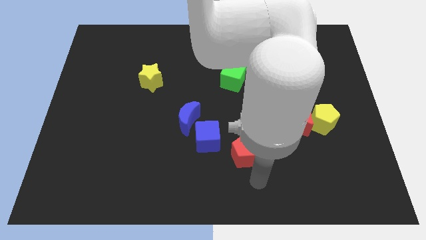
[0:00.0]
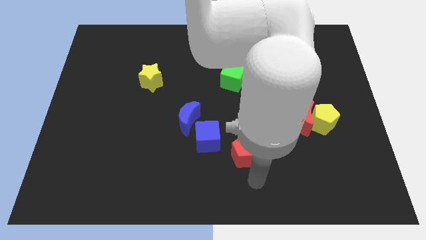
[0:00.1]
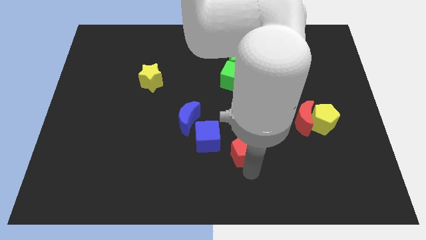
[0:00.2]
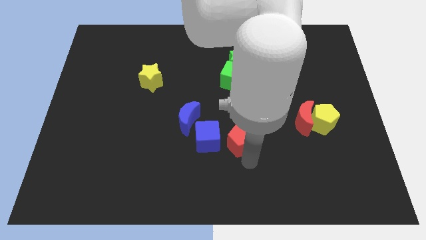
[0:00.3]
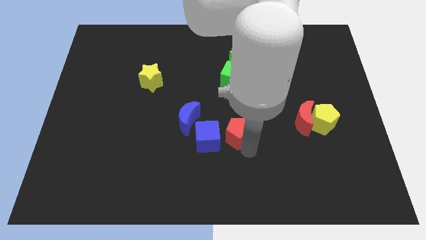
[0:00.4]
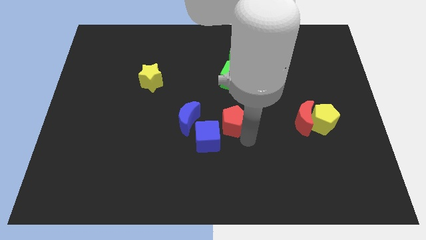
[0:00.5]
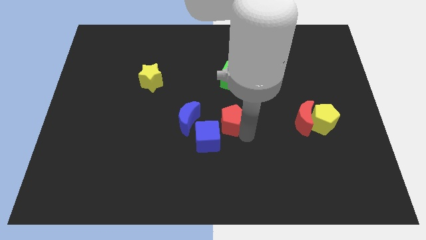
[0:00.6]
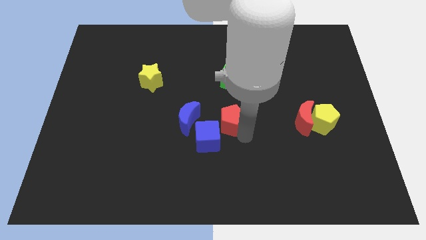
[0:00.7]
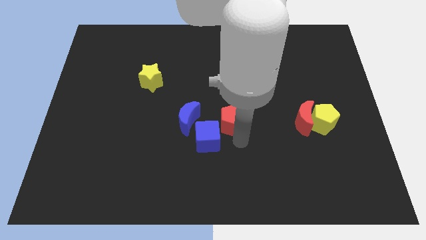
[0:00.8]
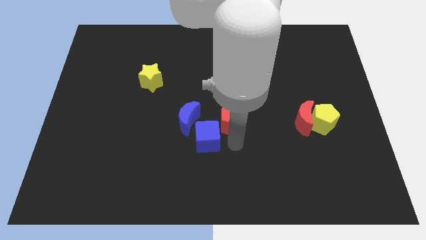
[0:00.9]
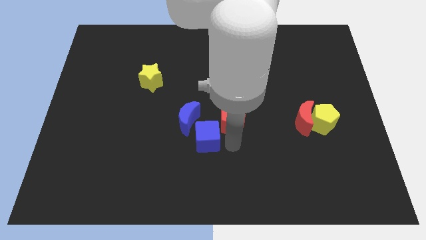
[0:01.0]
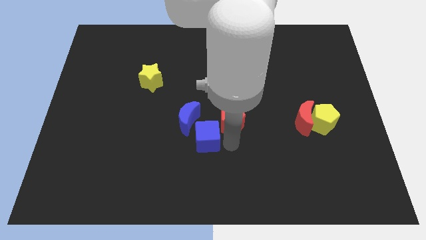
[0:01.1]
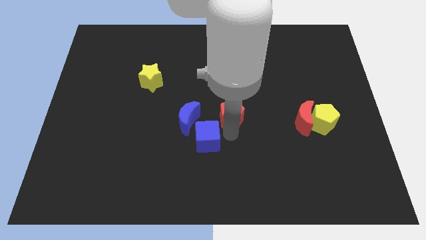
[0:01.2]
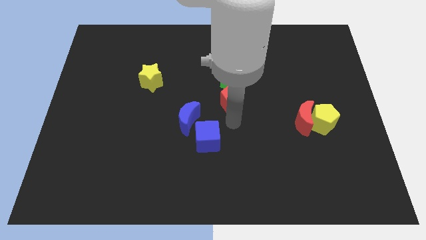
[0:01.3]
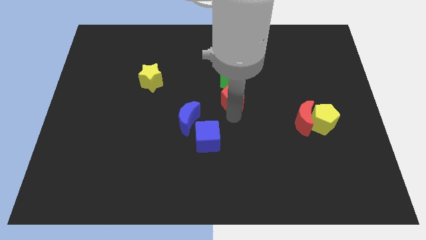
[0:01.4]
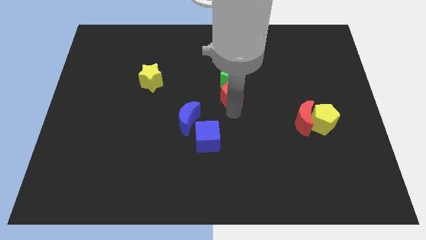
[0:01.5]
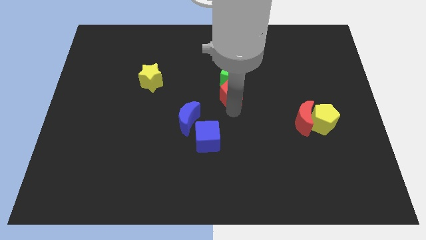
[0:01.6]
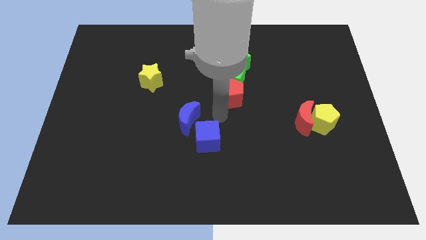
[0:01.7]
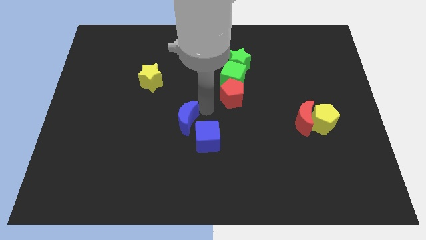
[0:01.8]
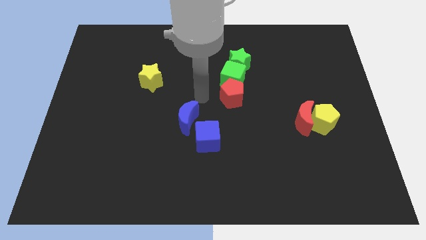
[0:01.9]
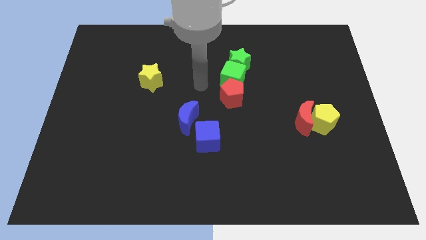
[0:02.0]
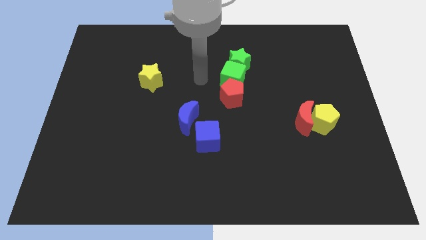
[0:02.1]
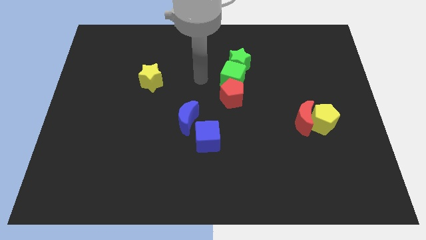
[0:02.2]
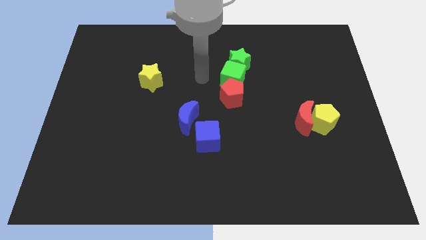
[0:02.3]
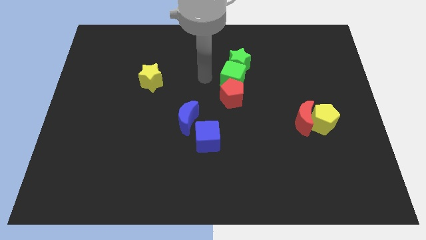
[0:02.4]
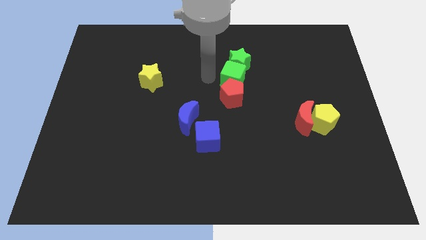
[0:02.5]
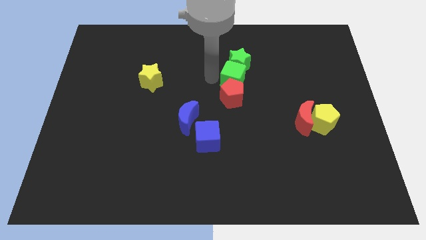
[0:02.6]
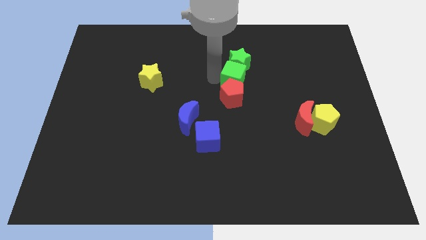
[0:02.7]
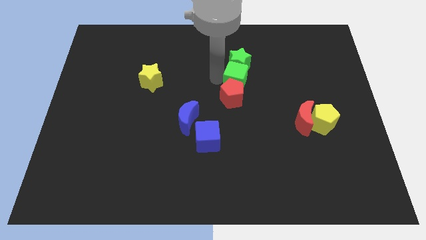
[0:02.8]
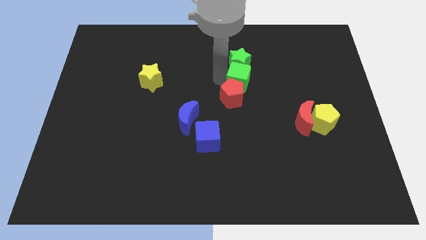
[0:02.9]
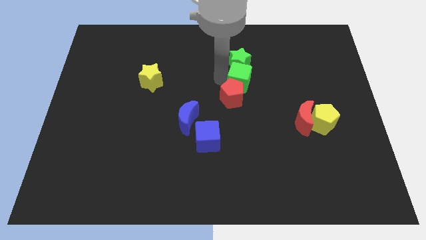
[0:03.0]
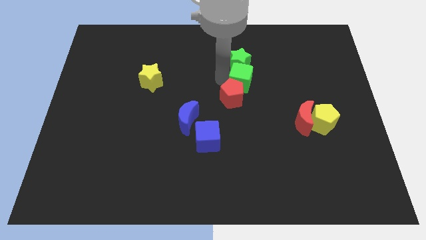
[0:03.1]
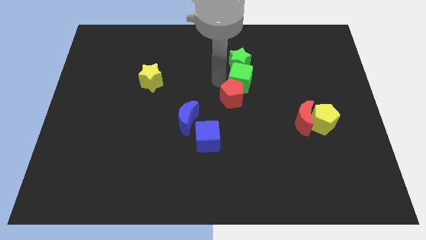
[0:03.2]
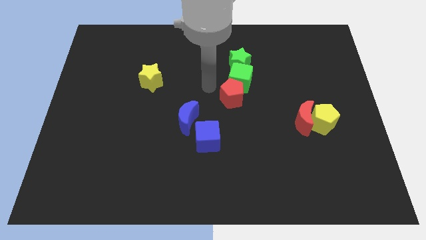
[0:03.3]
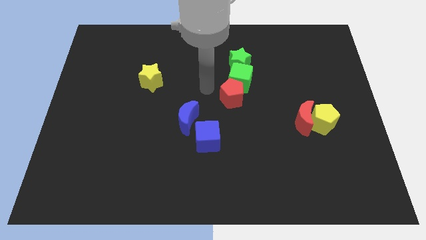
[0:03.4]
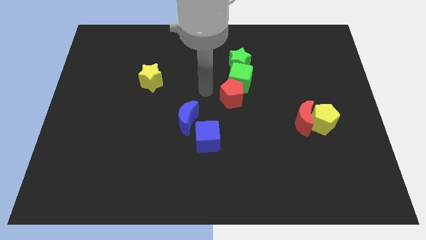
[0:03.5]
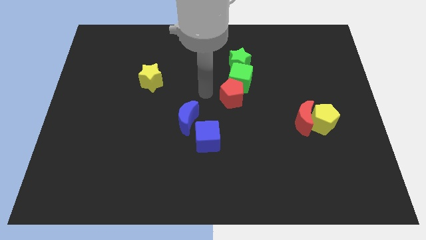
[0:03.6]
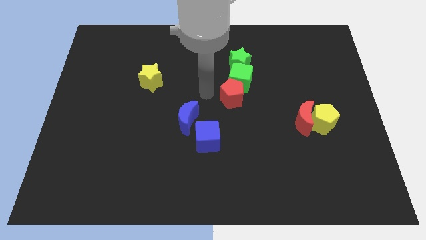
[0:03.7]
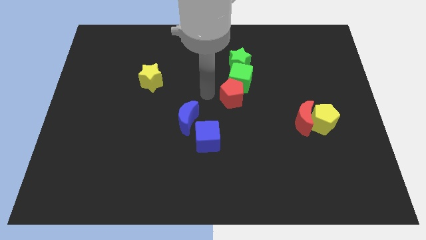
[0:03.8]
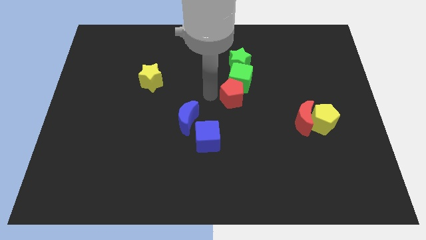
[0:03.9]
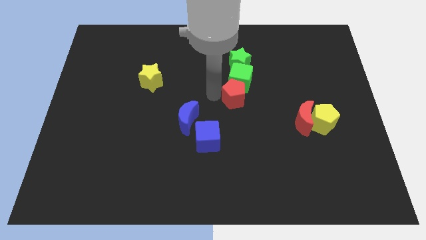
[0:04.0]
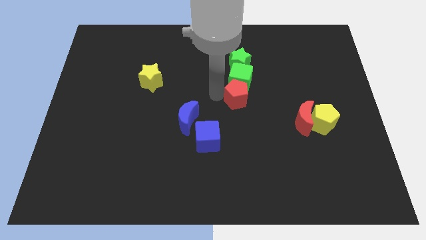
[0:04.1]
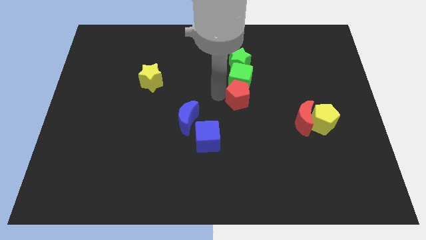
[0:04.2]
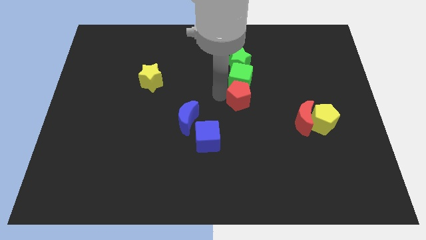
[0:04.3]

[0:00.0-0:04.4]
move the green cube and red pentagon to the bottom side of the green star

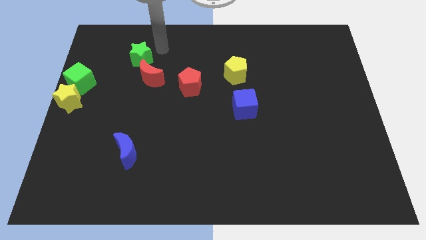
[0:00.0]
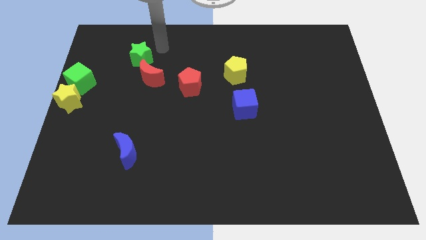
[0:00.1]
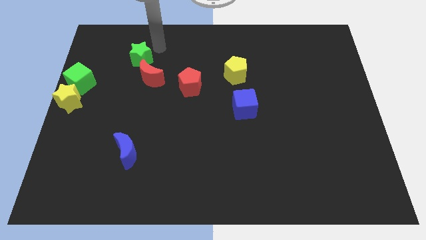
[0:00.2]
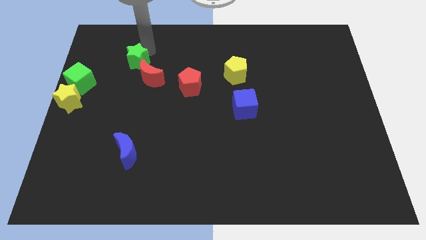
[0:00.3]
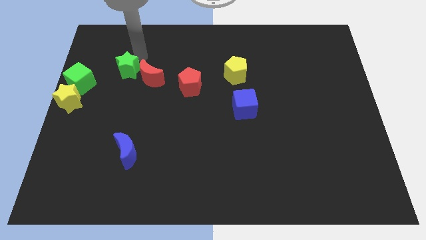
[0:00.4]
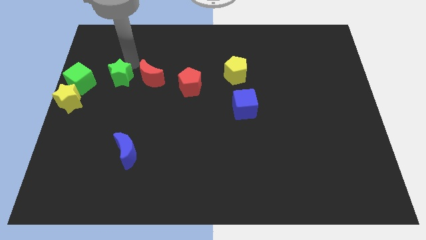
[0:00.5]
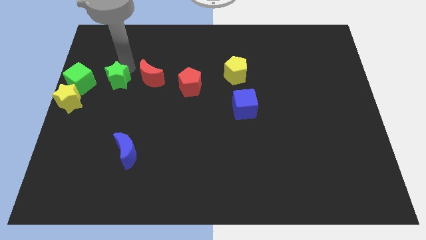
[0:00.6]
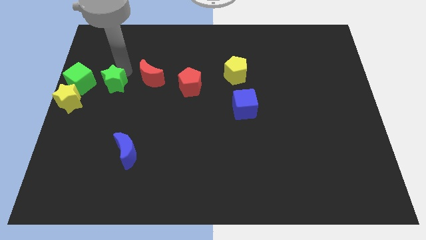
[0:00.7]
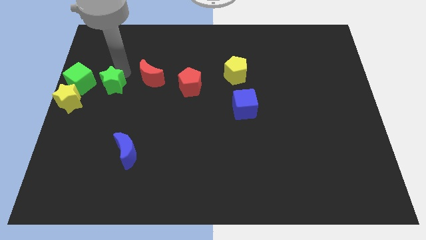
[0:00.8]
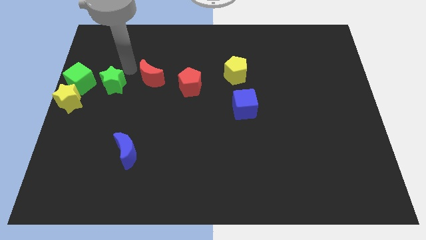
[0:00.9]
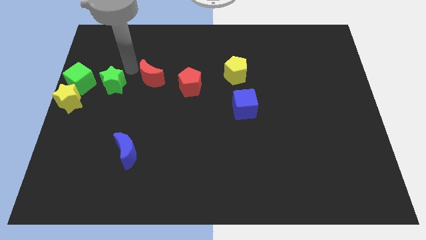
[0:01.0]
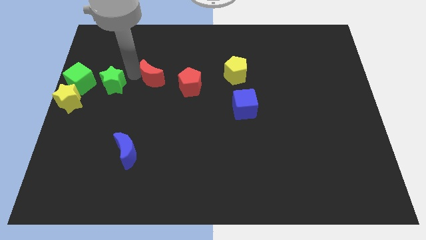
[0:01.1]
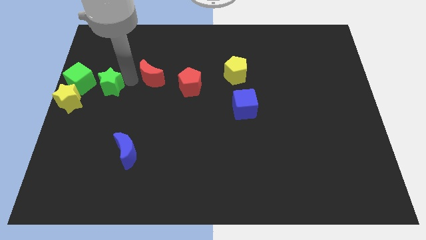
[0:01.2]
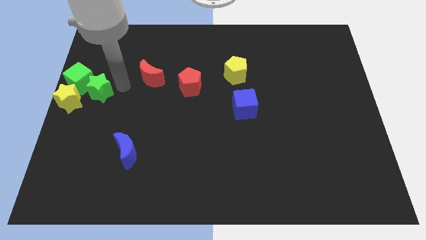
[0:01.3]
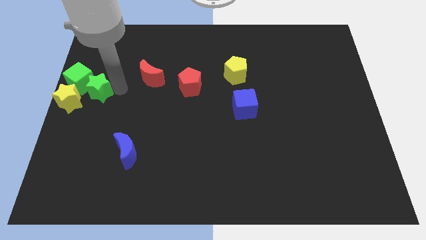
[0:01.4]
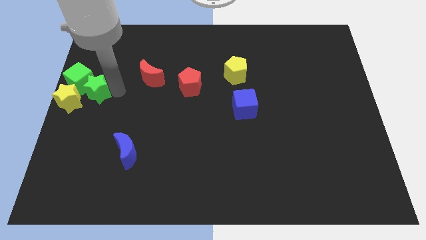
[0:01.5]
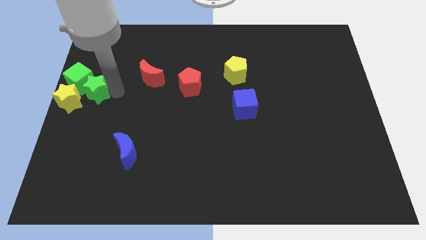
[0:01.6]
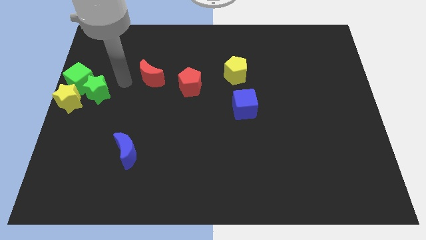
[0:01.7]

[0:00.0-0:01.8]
move the green star right to the green cube

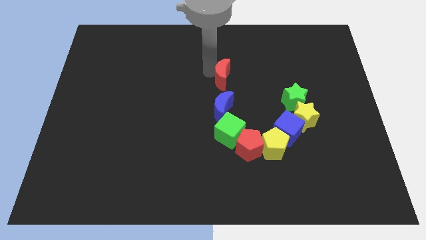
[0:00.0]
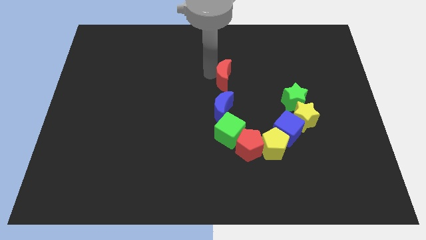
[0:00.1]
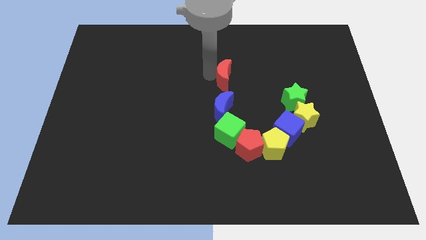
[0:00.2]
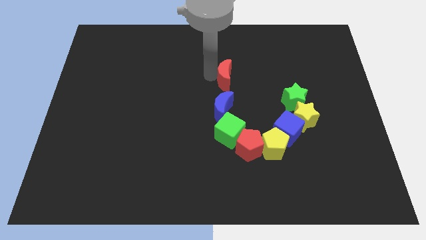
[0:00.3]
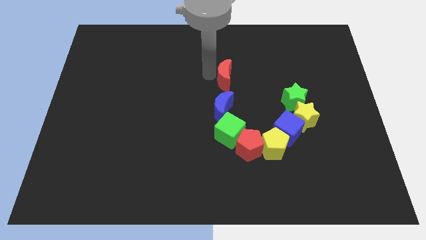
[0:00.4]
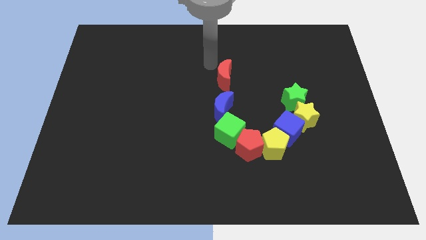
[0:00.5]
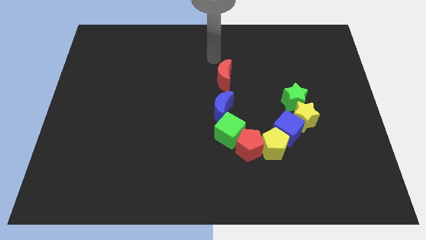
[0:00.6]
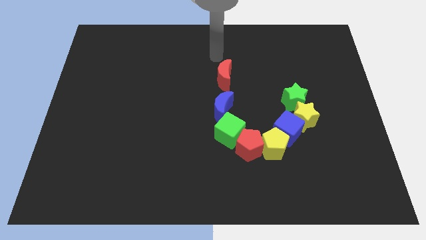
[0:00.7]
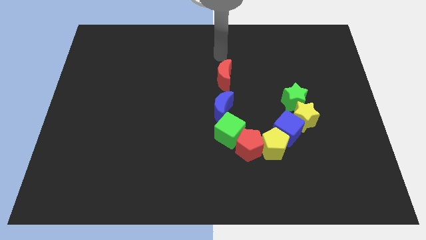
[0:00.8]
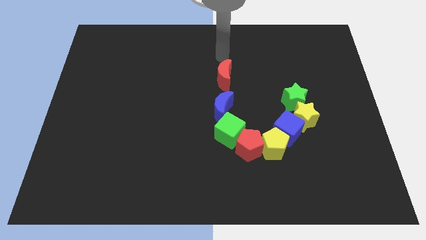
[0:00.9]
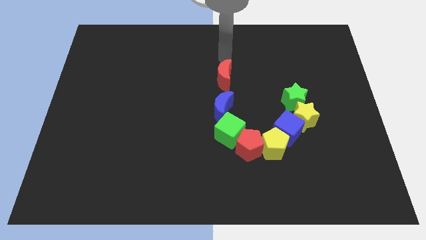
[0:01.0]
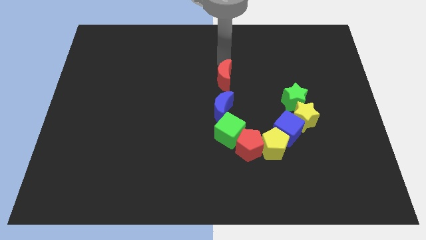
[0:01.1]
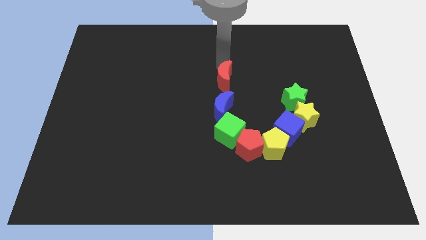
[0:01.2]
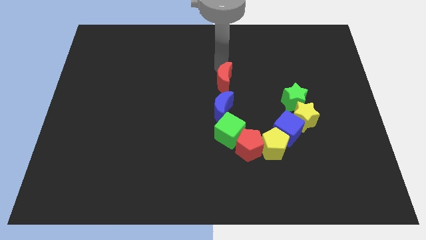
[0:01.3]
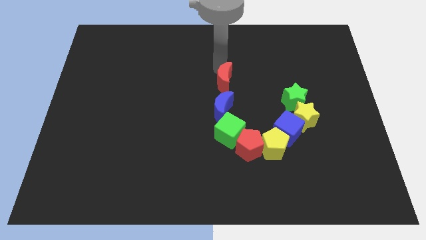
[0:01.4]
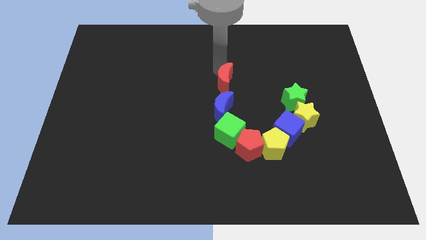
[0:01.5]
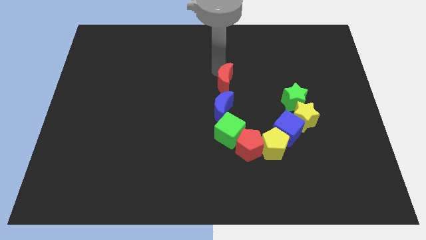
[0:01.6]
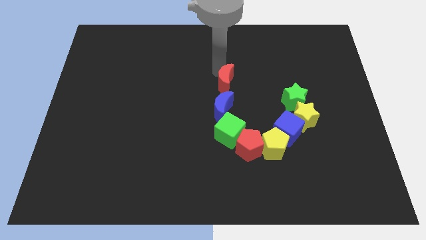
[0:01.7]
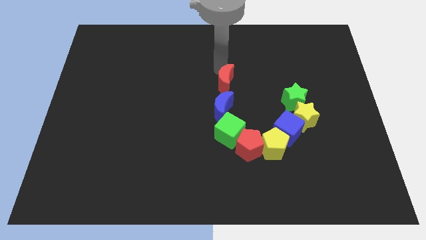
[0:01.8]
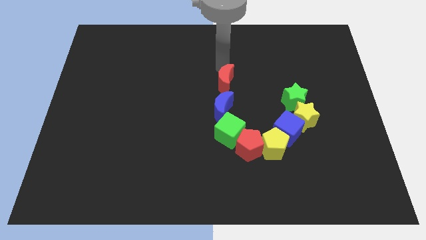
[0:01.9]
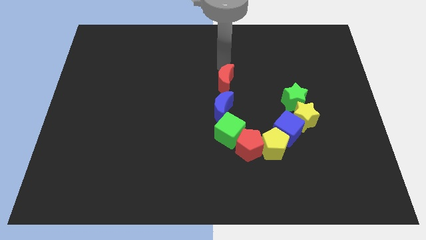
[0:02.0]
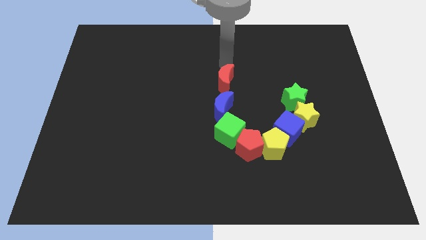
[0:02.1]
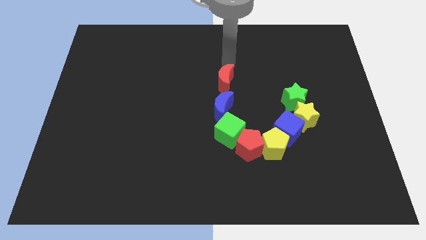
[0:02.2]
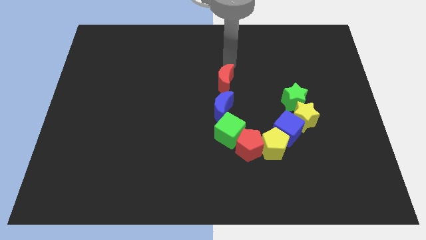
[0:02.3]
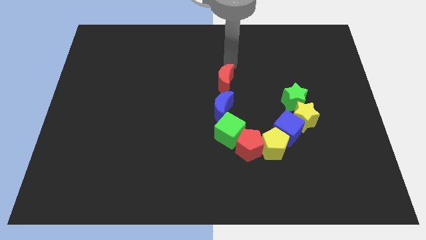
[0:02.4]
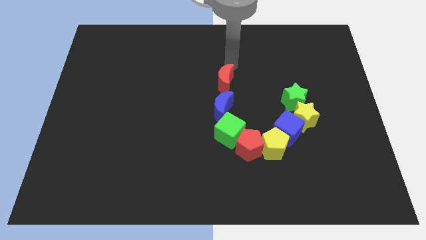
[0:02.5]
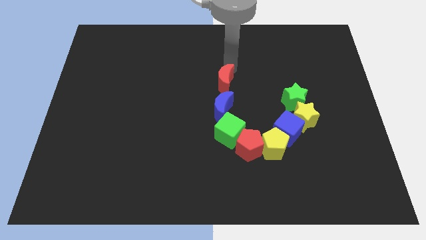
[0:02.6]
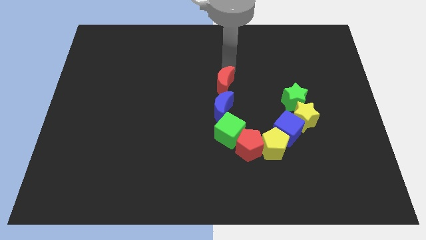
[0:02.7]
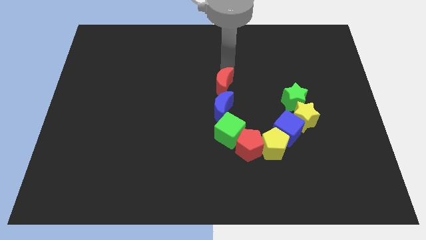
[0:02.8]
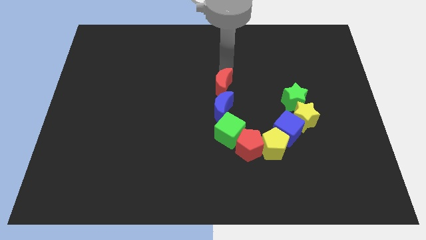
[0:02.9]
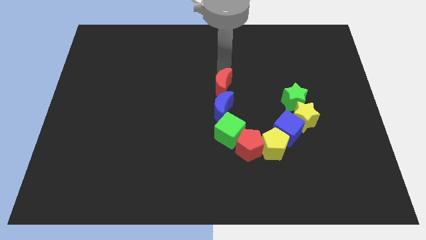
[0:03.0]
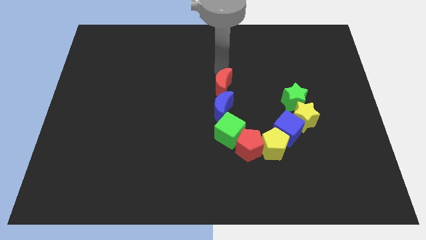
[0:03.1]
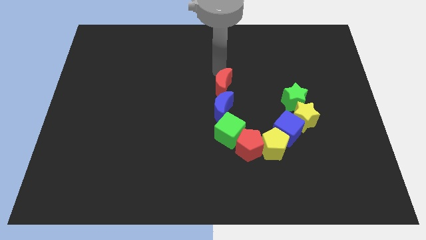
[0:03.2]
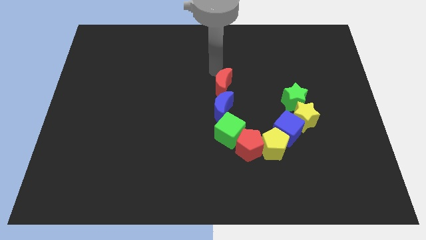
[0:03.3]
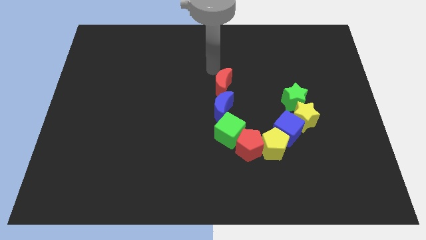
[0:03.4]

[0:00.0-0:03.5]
slightly move the red moon towards down
